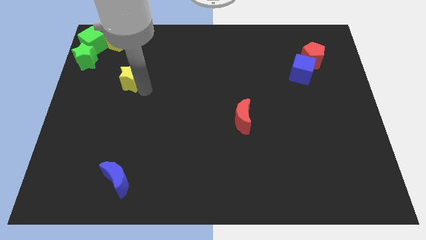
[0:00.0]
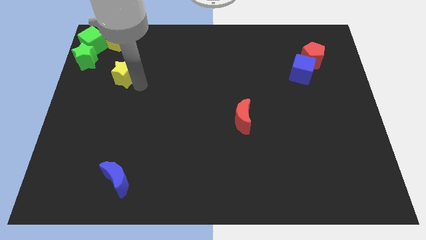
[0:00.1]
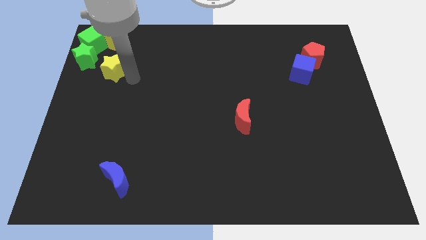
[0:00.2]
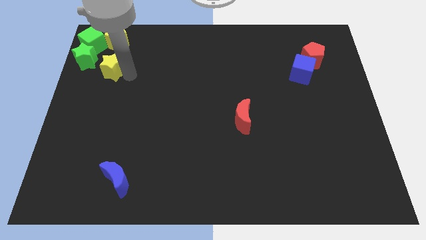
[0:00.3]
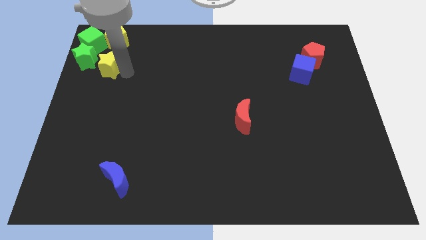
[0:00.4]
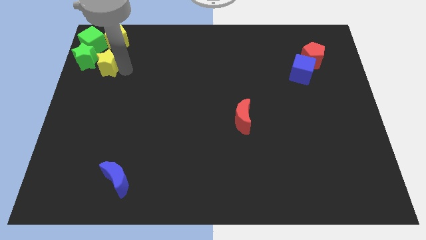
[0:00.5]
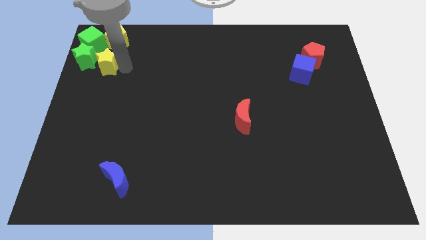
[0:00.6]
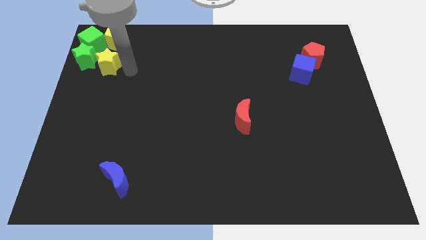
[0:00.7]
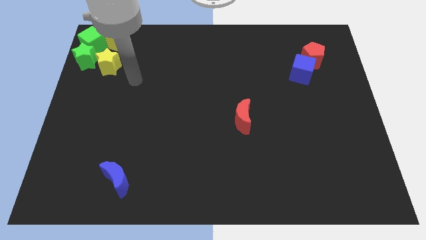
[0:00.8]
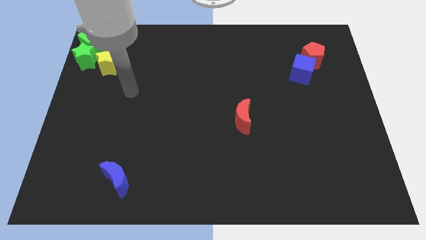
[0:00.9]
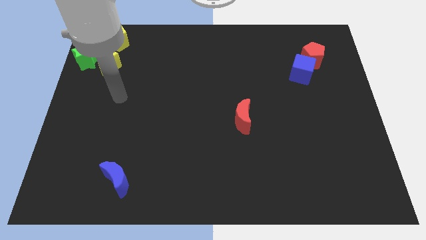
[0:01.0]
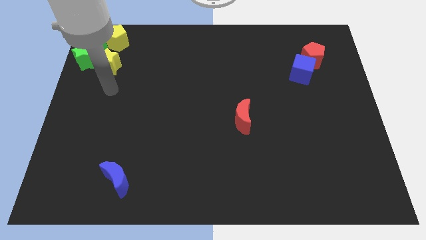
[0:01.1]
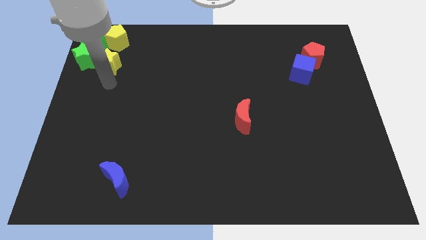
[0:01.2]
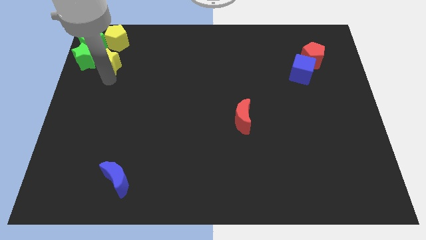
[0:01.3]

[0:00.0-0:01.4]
push the yellow star close to the group of blocks at the top left corner of the board

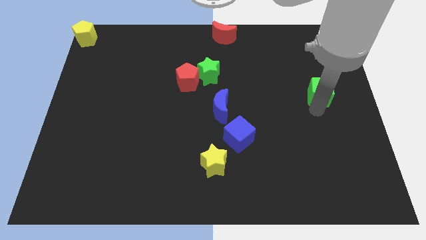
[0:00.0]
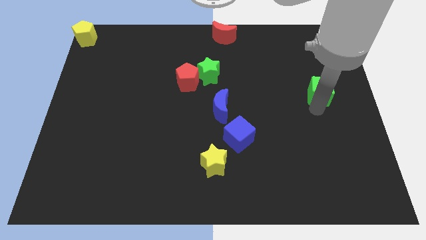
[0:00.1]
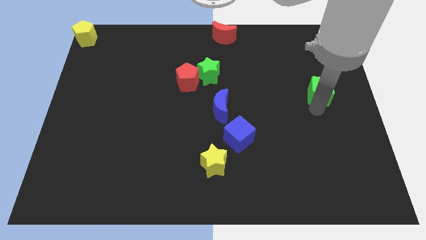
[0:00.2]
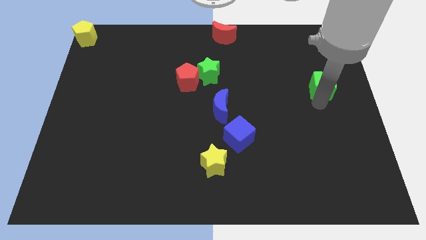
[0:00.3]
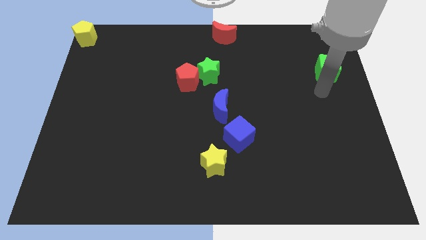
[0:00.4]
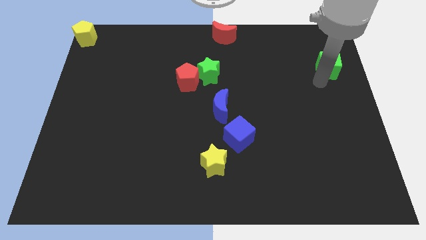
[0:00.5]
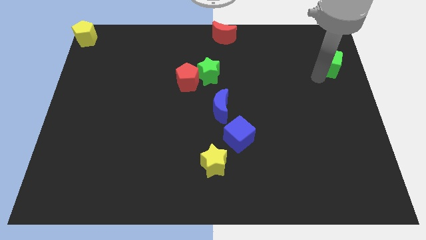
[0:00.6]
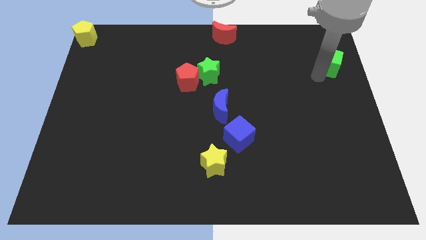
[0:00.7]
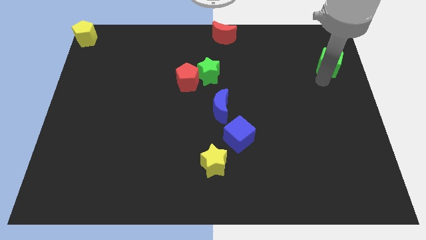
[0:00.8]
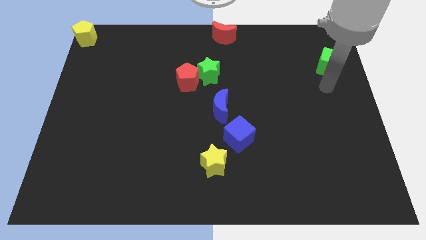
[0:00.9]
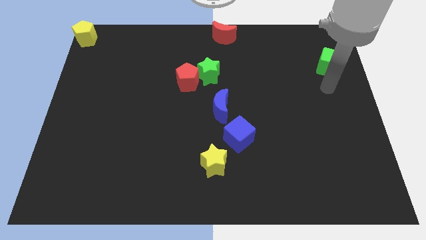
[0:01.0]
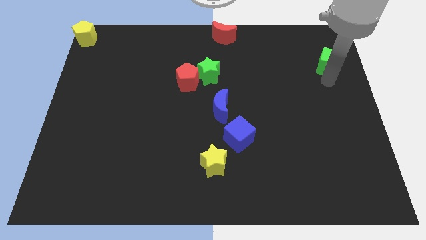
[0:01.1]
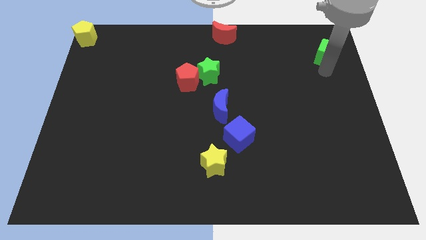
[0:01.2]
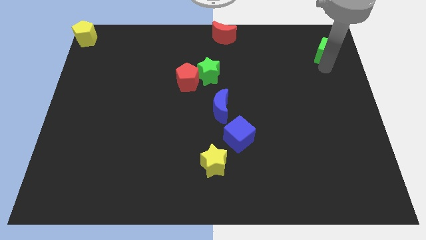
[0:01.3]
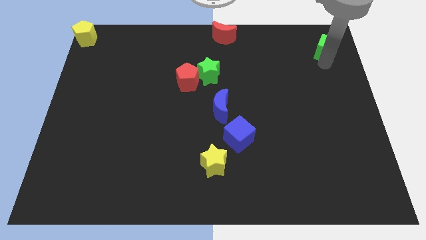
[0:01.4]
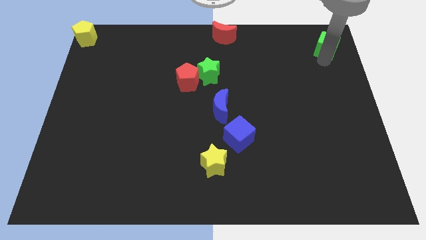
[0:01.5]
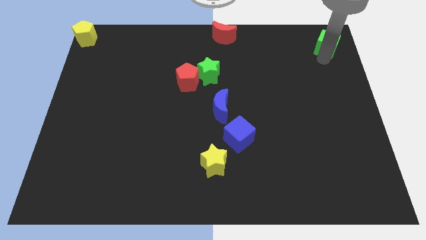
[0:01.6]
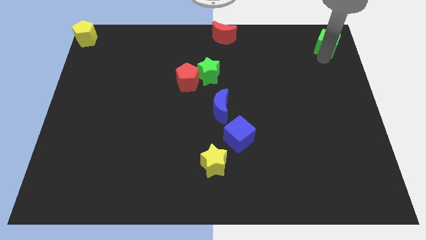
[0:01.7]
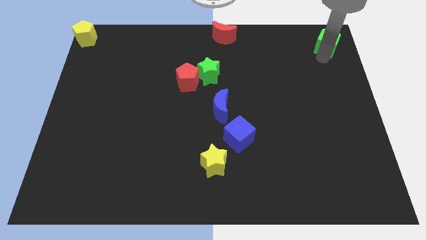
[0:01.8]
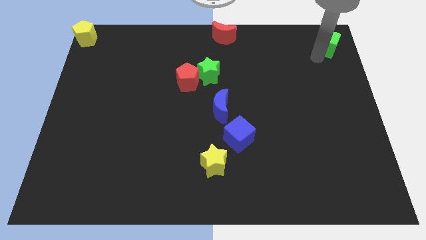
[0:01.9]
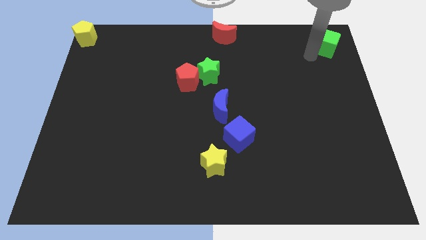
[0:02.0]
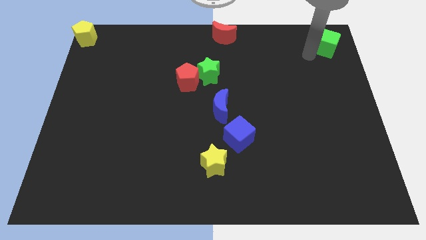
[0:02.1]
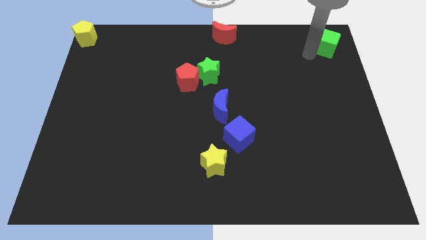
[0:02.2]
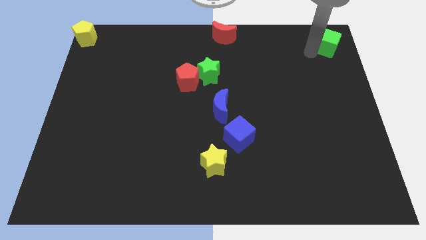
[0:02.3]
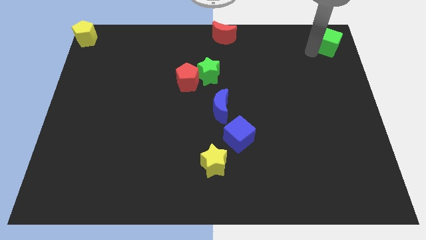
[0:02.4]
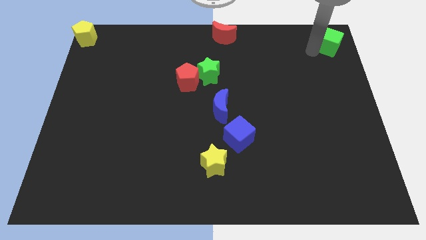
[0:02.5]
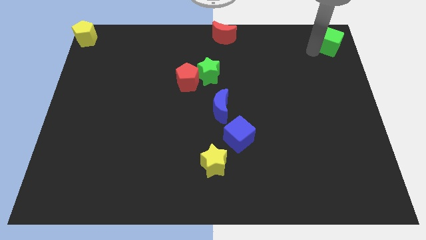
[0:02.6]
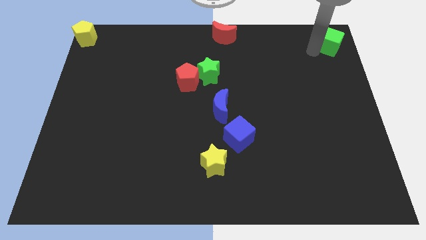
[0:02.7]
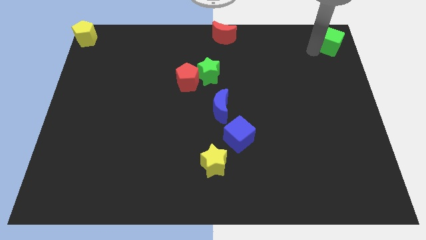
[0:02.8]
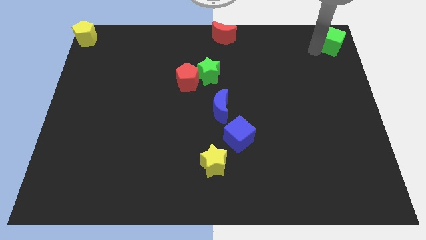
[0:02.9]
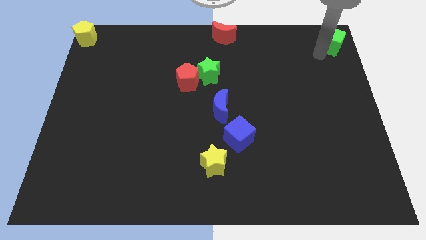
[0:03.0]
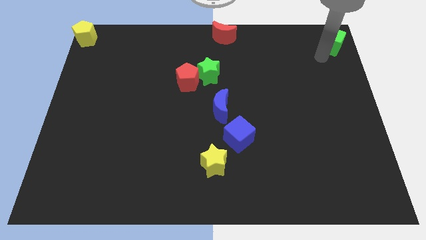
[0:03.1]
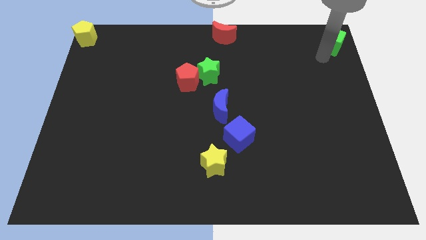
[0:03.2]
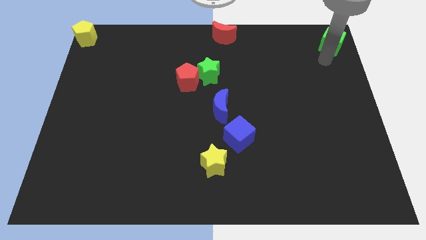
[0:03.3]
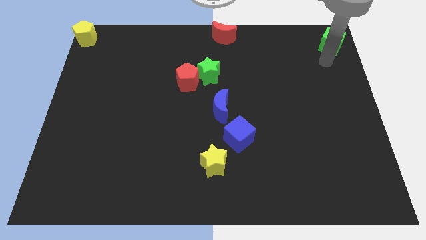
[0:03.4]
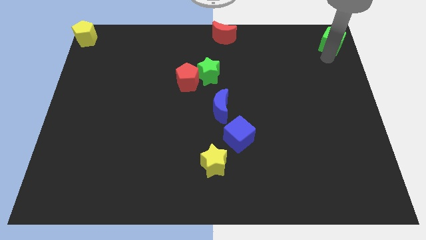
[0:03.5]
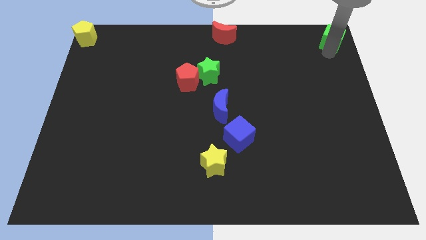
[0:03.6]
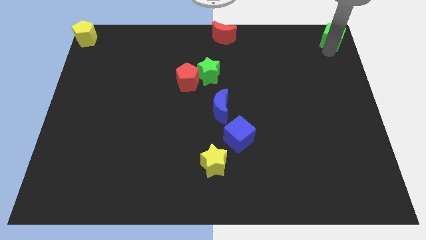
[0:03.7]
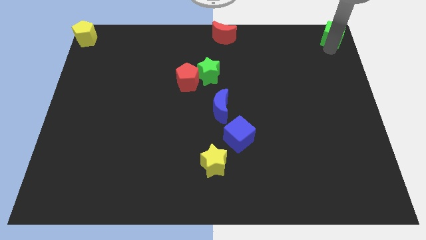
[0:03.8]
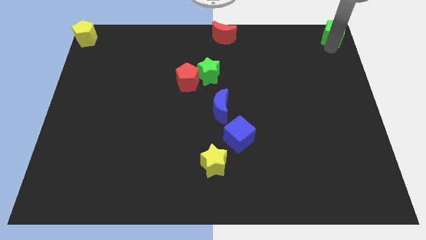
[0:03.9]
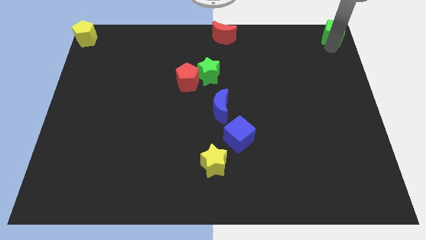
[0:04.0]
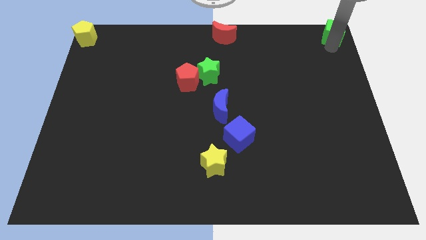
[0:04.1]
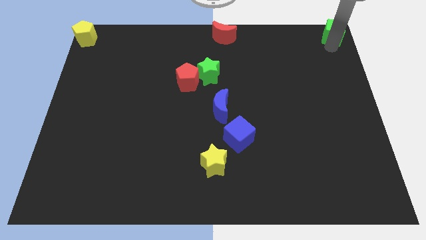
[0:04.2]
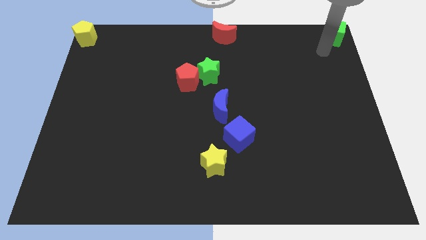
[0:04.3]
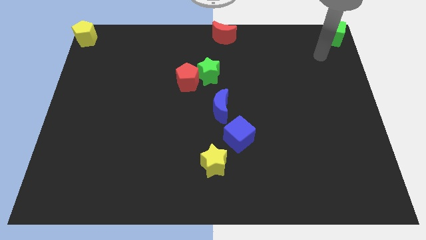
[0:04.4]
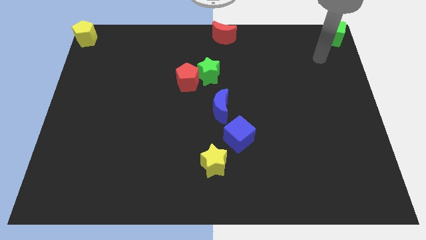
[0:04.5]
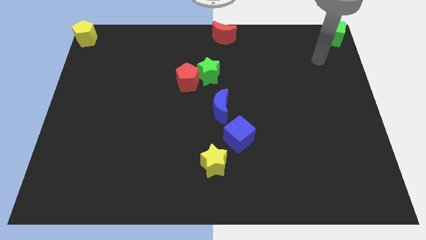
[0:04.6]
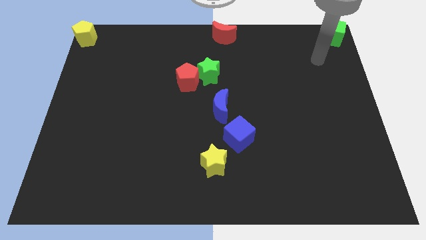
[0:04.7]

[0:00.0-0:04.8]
move the green cube to the top right corner of the board

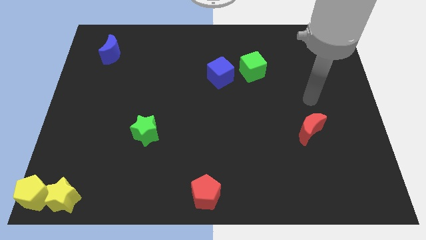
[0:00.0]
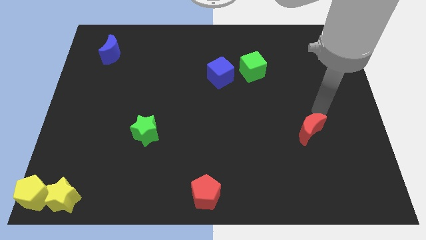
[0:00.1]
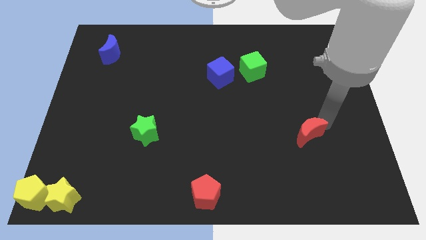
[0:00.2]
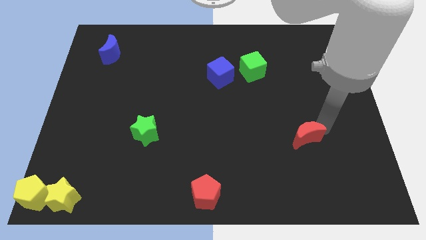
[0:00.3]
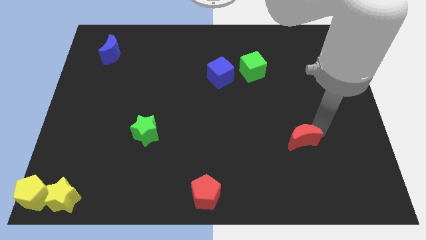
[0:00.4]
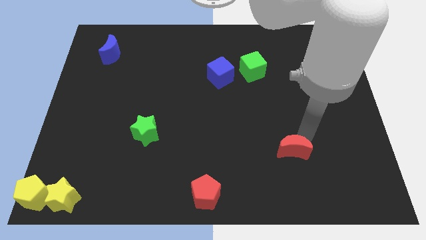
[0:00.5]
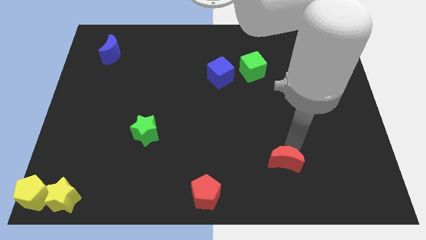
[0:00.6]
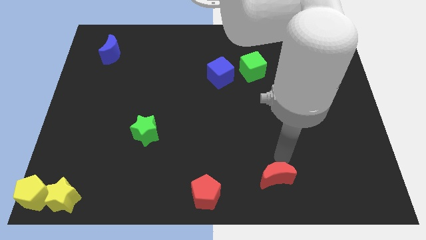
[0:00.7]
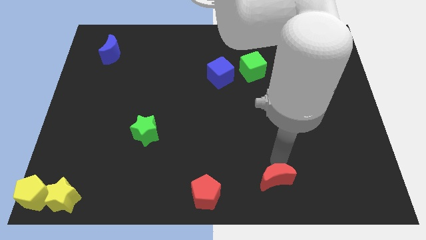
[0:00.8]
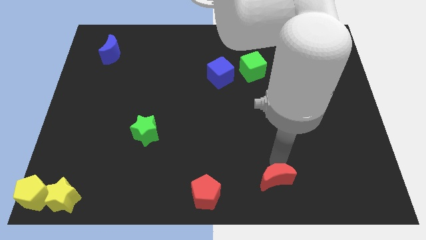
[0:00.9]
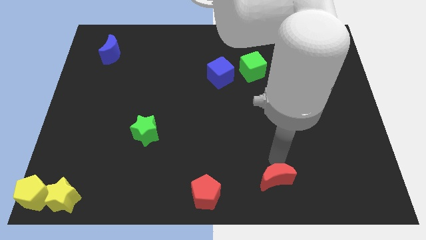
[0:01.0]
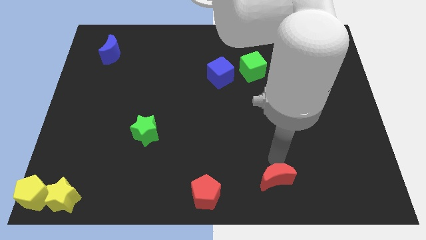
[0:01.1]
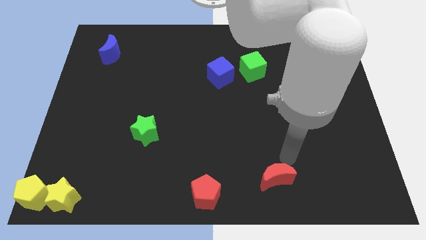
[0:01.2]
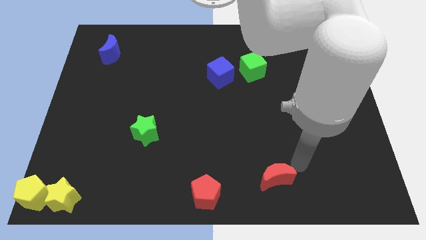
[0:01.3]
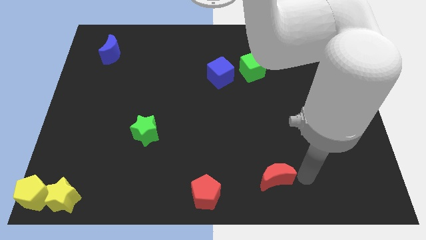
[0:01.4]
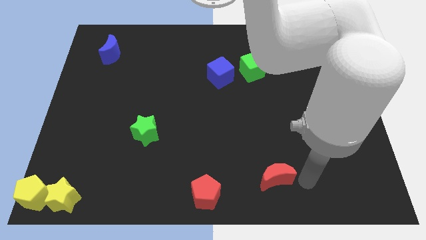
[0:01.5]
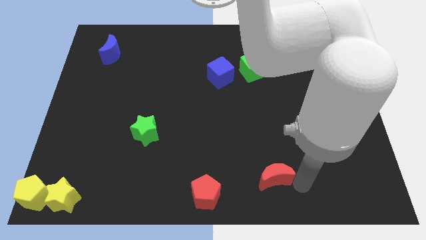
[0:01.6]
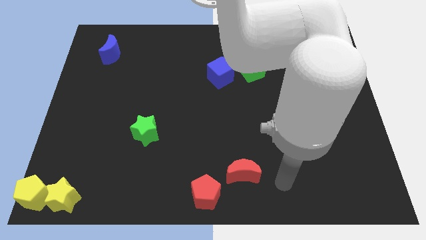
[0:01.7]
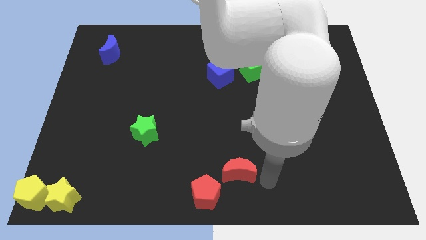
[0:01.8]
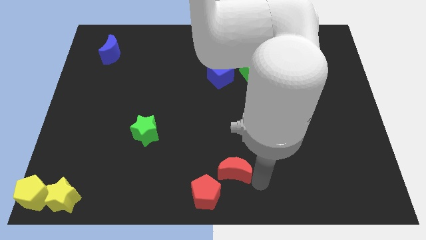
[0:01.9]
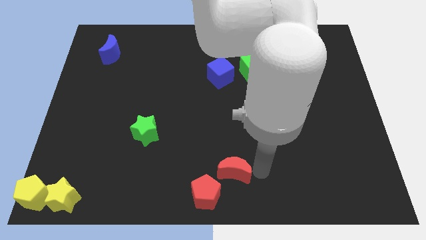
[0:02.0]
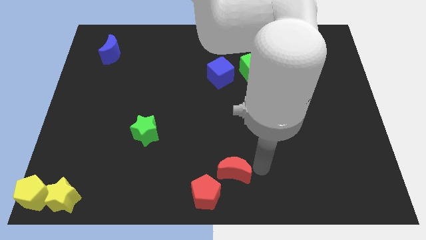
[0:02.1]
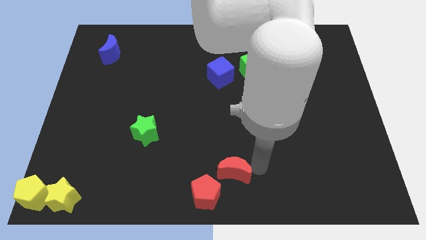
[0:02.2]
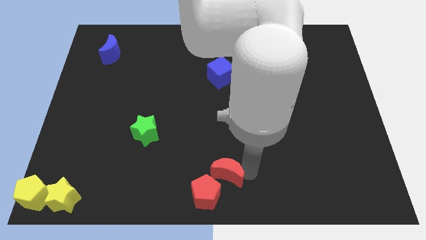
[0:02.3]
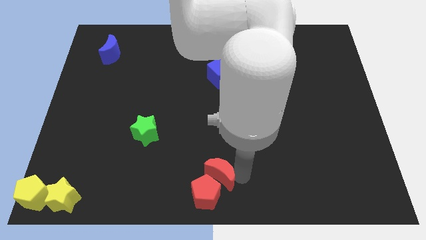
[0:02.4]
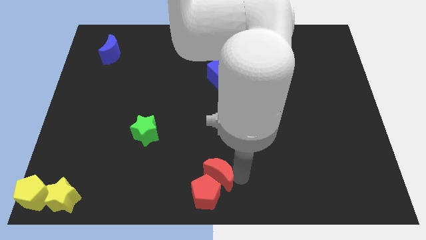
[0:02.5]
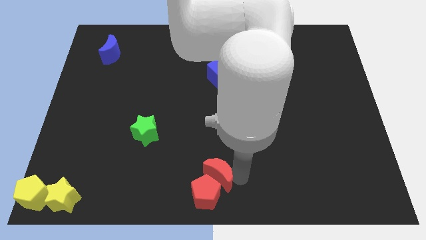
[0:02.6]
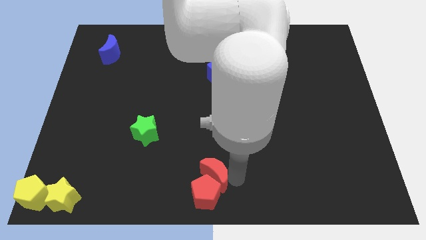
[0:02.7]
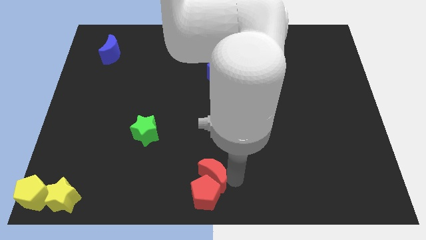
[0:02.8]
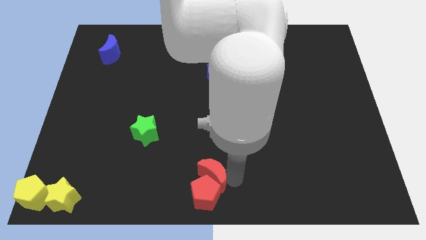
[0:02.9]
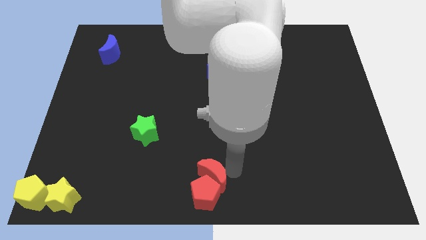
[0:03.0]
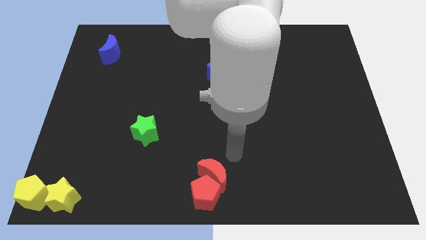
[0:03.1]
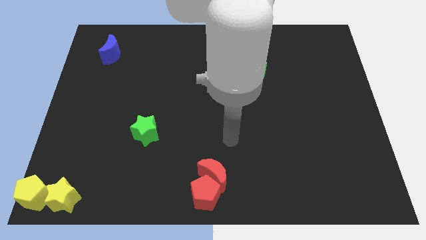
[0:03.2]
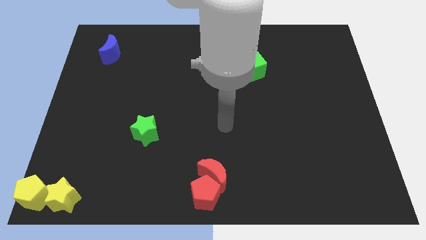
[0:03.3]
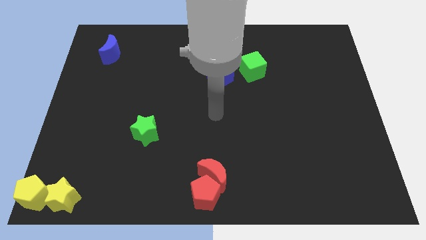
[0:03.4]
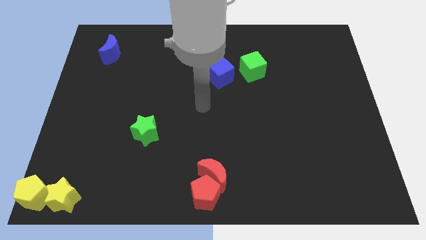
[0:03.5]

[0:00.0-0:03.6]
place the red crescent above the red pentagon
